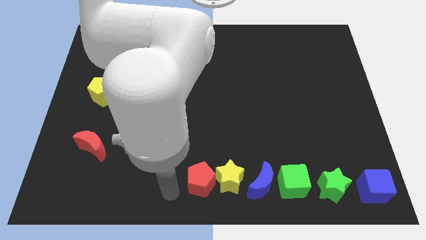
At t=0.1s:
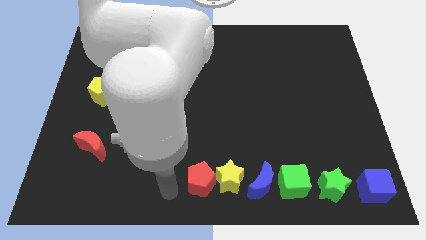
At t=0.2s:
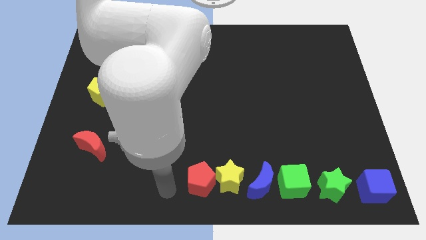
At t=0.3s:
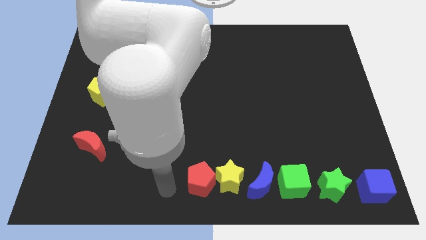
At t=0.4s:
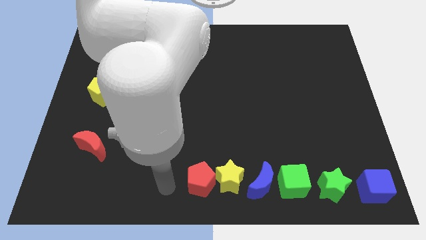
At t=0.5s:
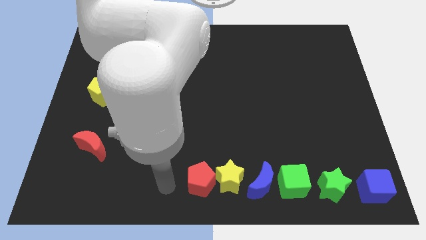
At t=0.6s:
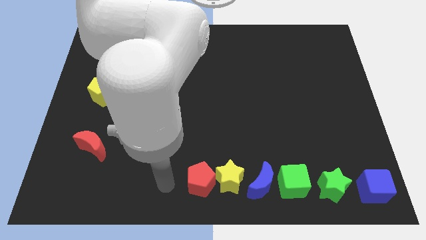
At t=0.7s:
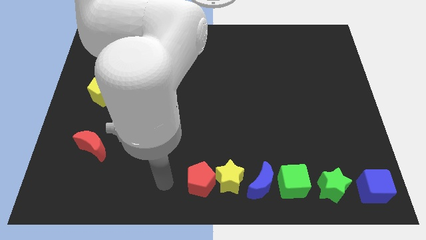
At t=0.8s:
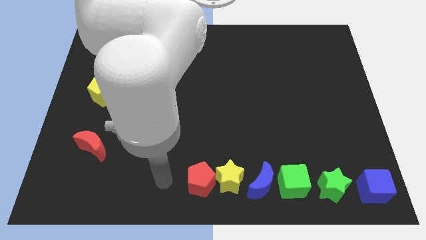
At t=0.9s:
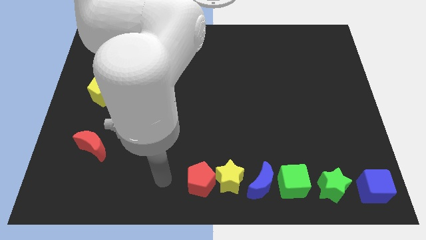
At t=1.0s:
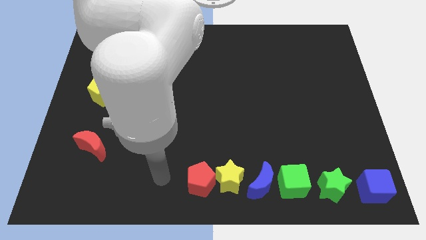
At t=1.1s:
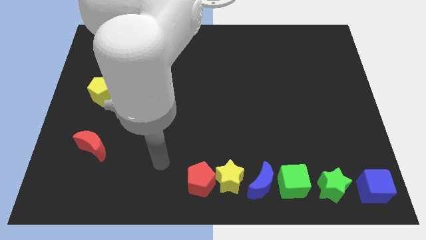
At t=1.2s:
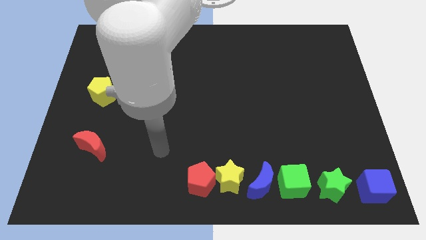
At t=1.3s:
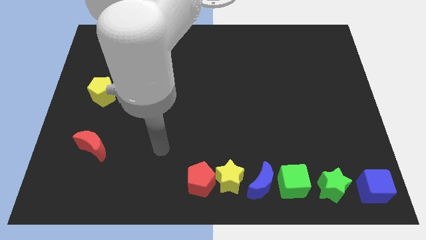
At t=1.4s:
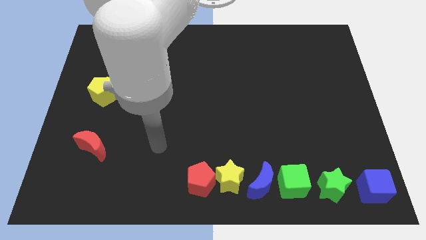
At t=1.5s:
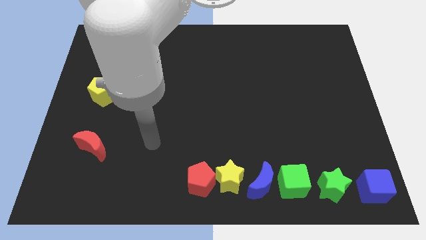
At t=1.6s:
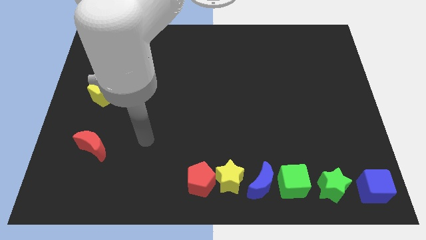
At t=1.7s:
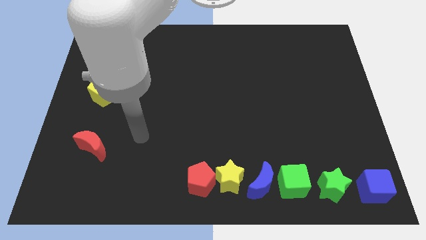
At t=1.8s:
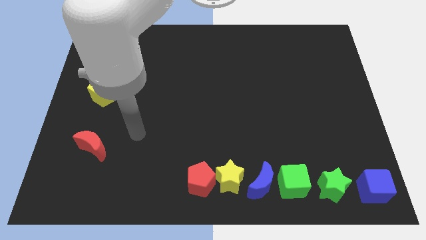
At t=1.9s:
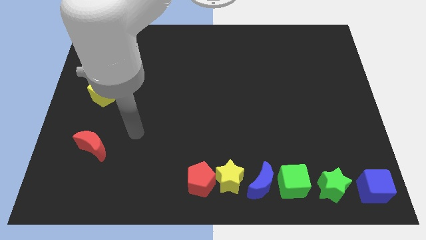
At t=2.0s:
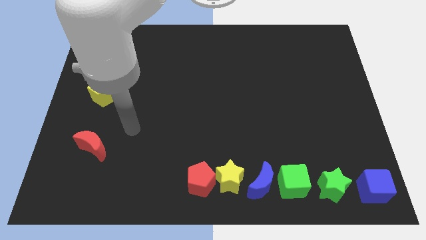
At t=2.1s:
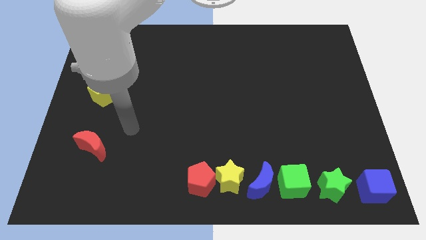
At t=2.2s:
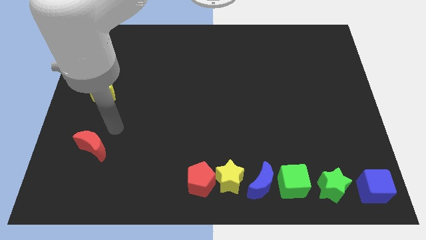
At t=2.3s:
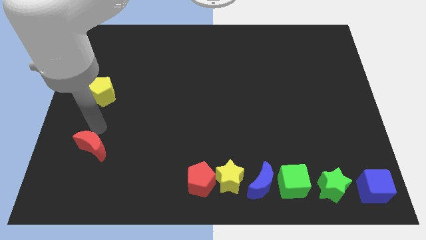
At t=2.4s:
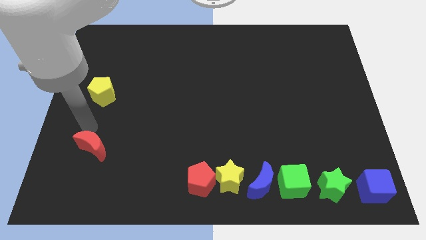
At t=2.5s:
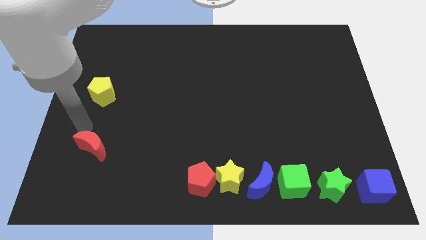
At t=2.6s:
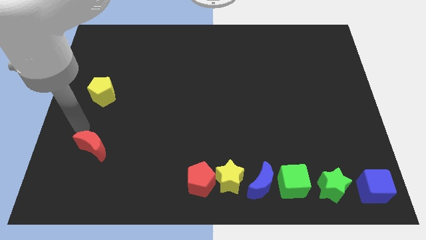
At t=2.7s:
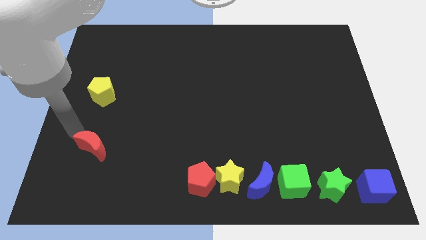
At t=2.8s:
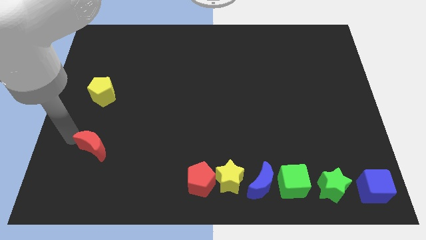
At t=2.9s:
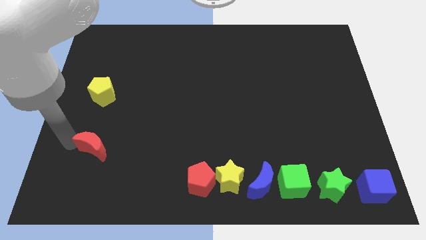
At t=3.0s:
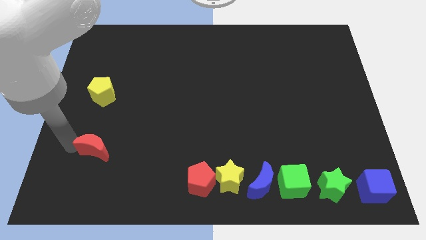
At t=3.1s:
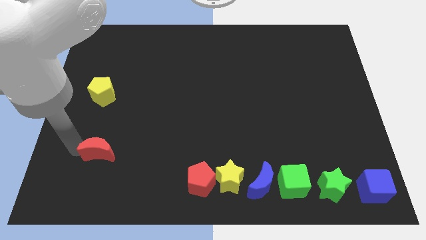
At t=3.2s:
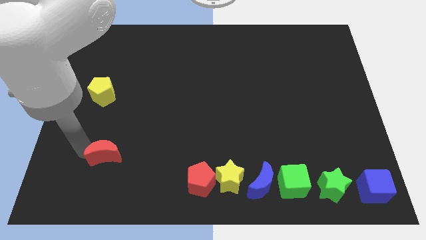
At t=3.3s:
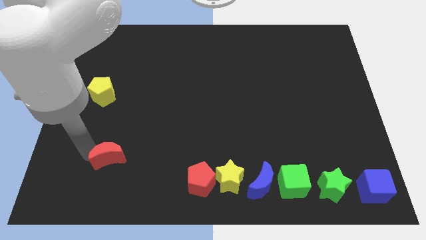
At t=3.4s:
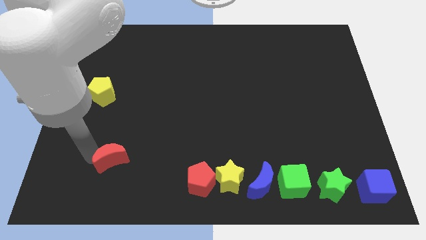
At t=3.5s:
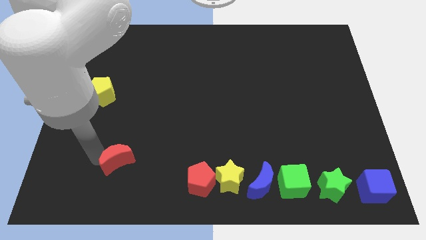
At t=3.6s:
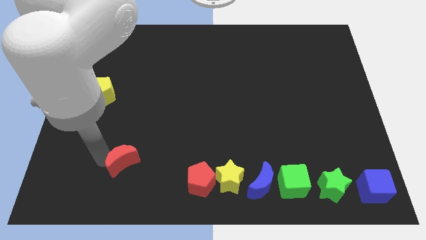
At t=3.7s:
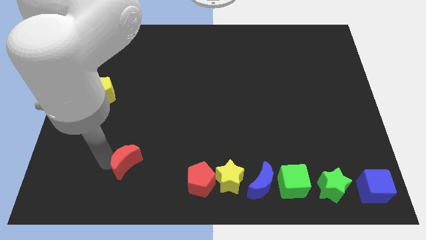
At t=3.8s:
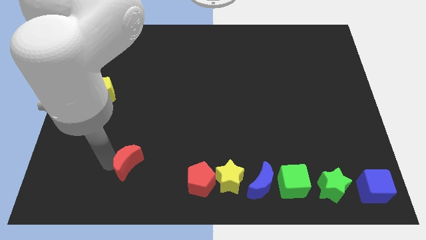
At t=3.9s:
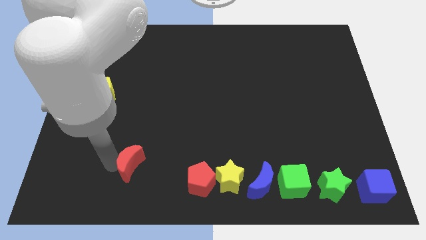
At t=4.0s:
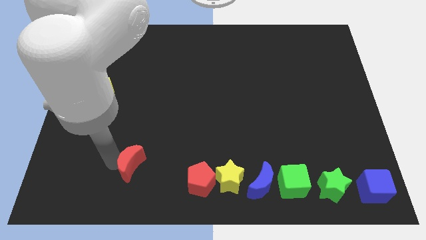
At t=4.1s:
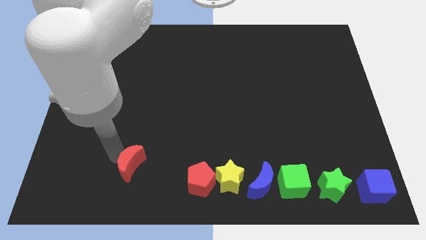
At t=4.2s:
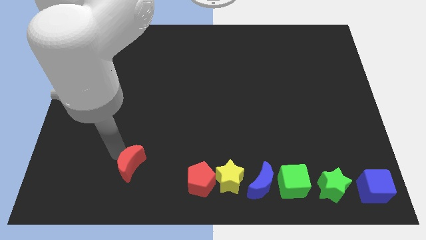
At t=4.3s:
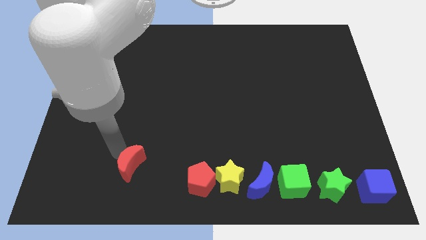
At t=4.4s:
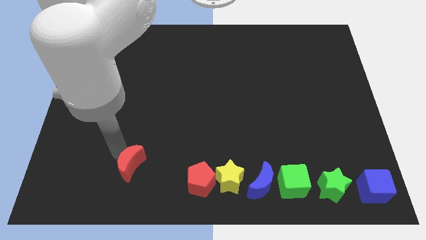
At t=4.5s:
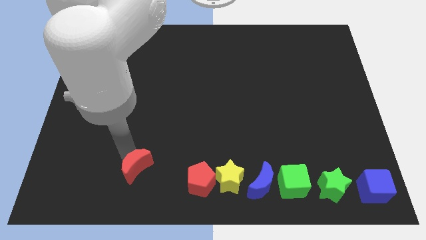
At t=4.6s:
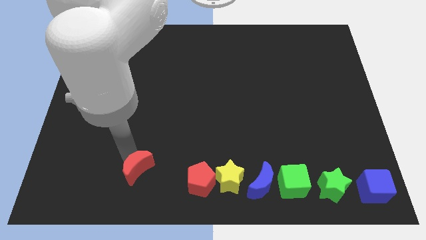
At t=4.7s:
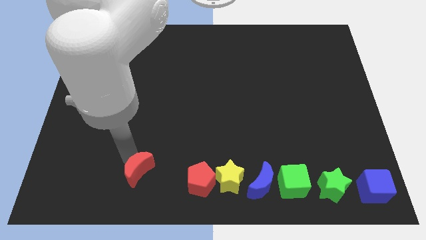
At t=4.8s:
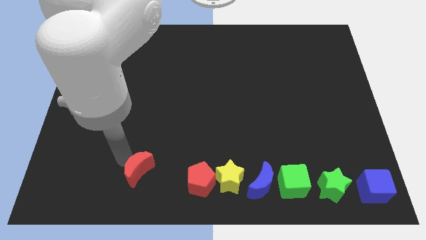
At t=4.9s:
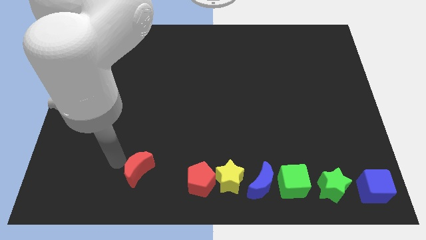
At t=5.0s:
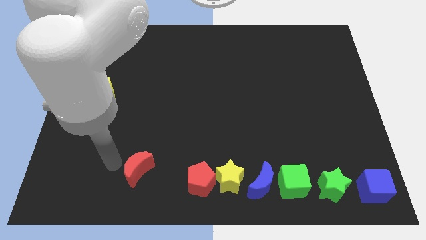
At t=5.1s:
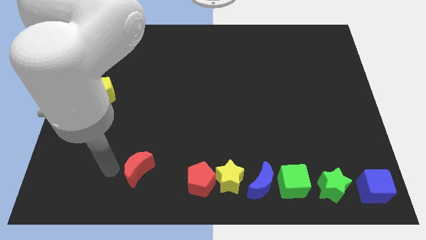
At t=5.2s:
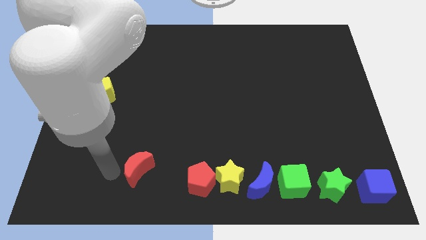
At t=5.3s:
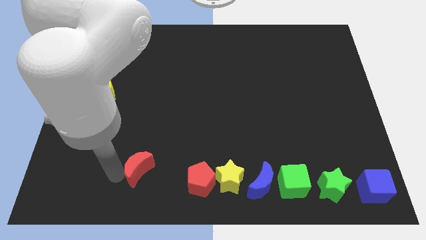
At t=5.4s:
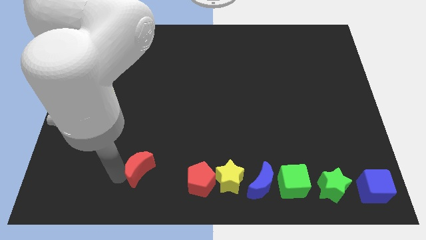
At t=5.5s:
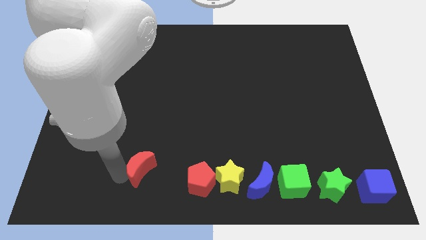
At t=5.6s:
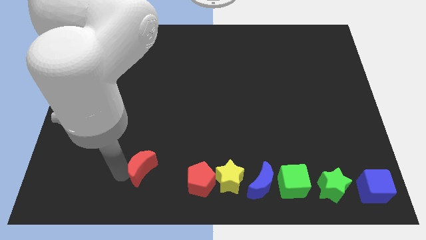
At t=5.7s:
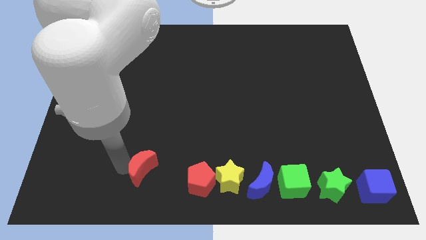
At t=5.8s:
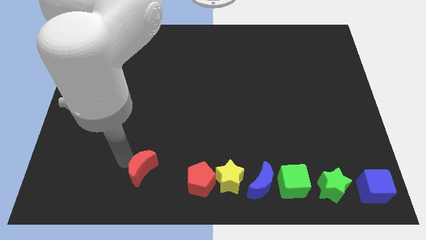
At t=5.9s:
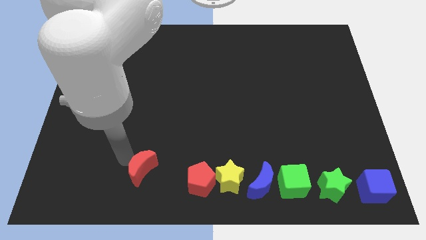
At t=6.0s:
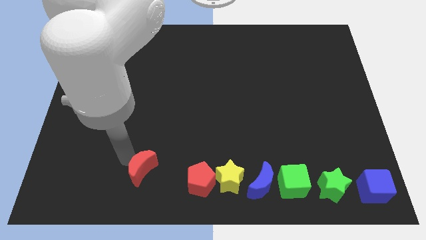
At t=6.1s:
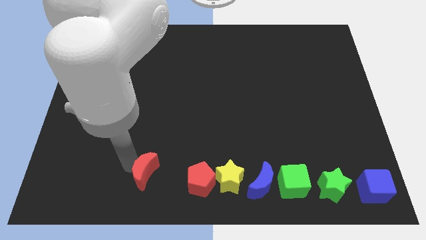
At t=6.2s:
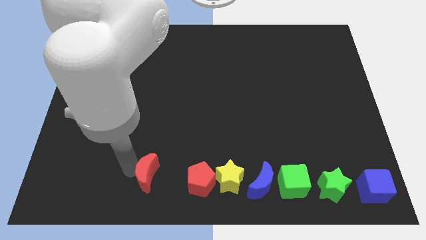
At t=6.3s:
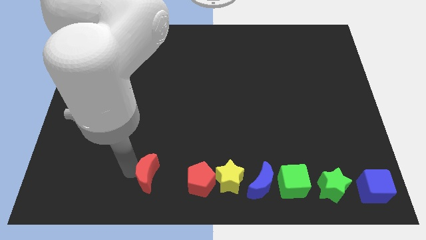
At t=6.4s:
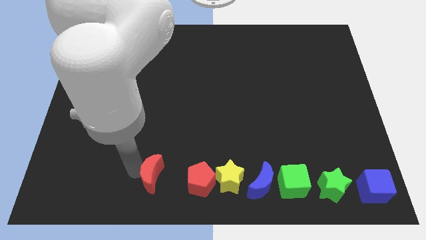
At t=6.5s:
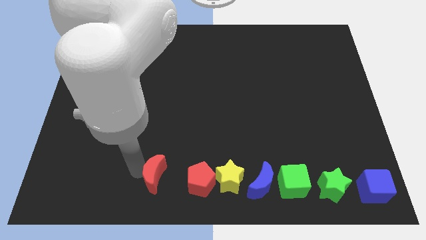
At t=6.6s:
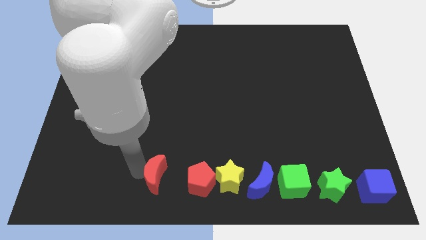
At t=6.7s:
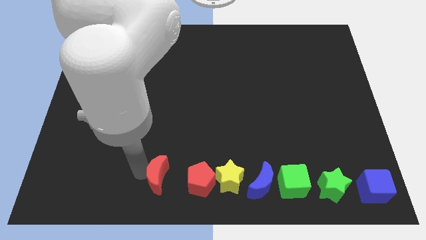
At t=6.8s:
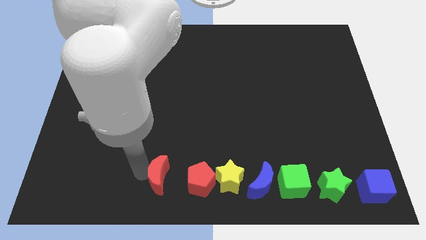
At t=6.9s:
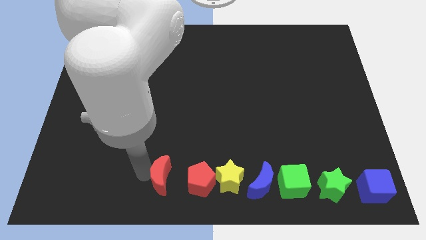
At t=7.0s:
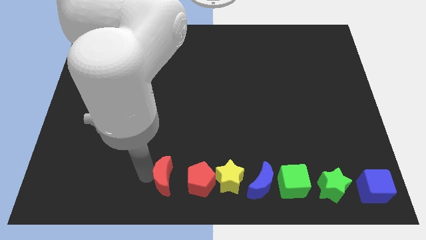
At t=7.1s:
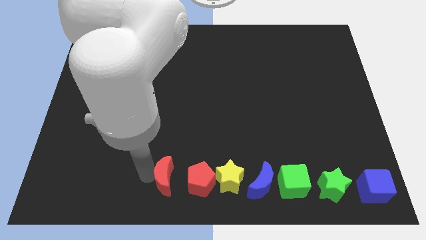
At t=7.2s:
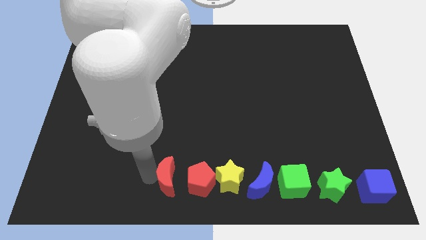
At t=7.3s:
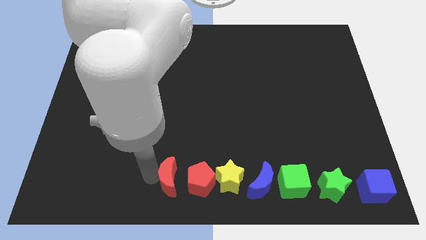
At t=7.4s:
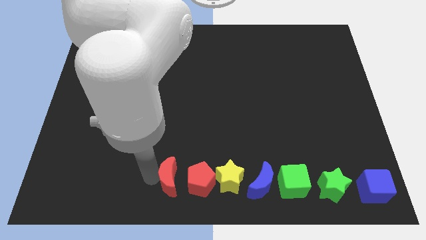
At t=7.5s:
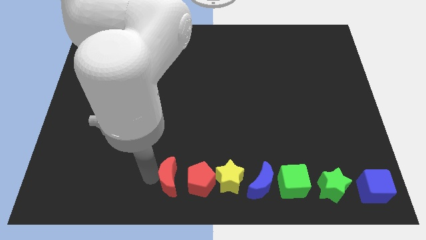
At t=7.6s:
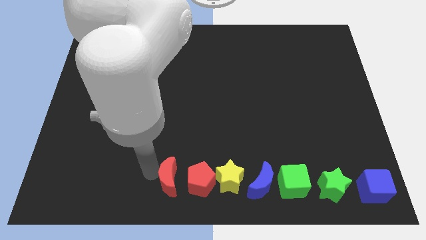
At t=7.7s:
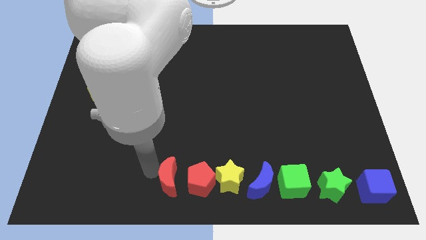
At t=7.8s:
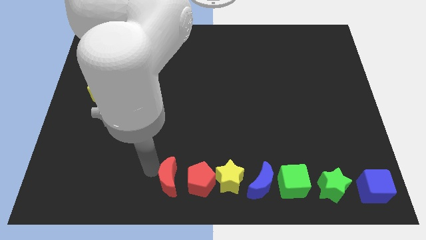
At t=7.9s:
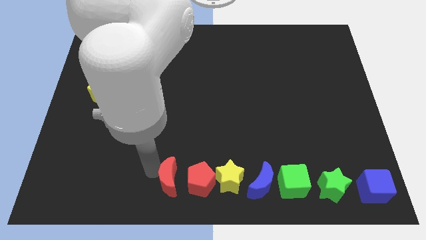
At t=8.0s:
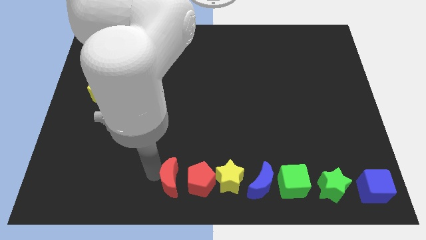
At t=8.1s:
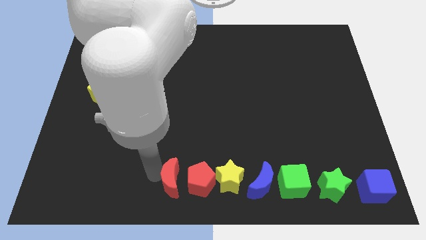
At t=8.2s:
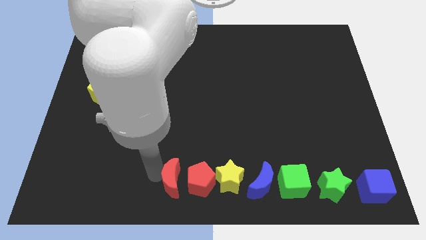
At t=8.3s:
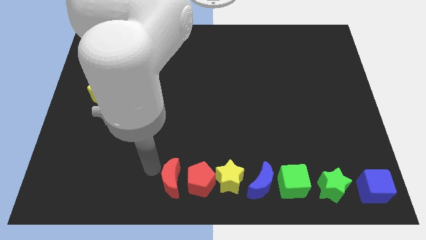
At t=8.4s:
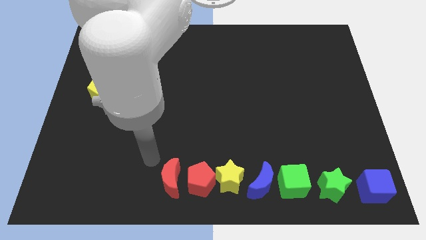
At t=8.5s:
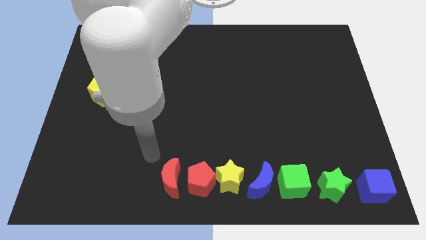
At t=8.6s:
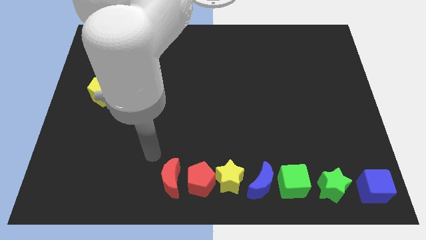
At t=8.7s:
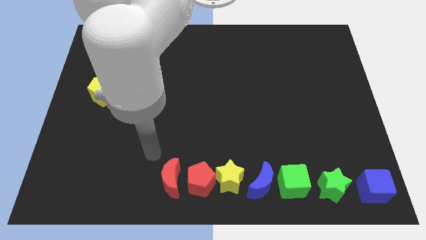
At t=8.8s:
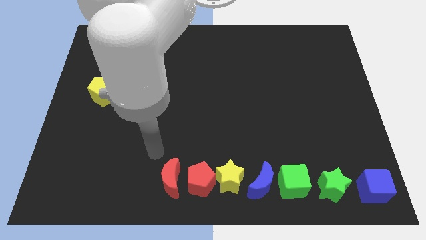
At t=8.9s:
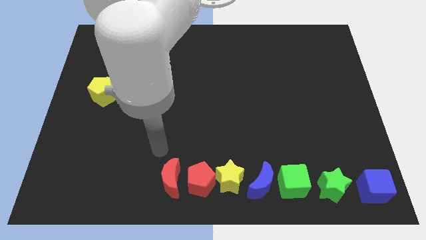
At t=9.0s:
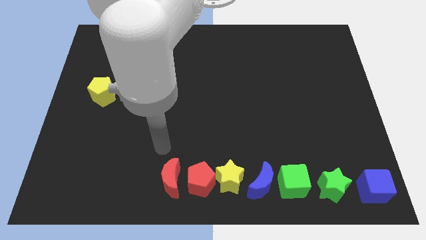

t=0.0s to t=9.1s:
move red crescent to the left of red pentagon

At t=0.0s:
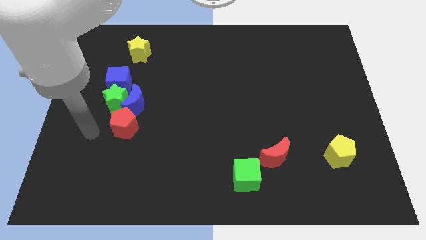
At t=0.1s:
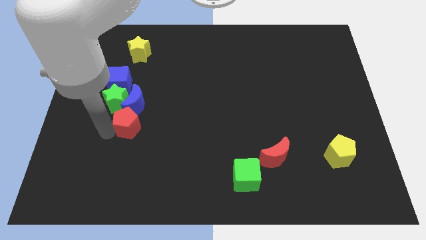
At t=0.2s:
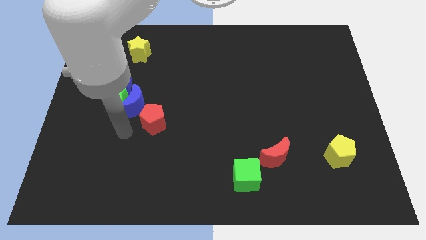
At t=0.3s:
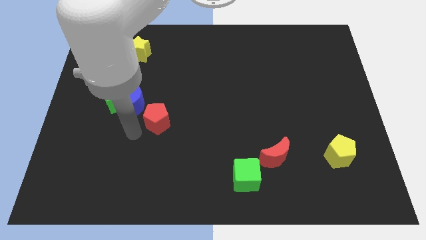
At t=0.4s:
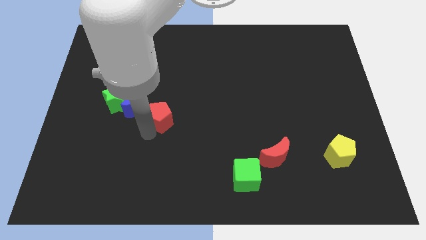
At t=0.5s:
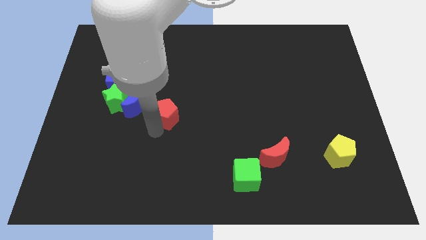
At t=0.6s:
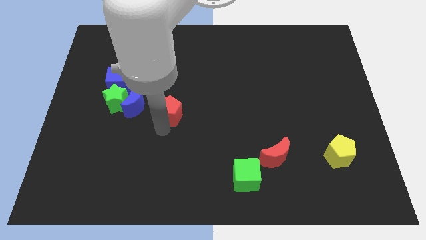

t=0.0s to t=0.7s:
separate red pentagon from blue moon
